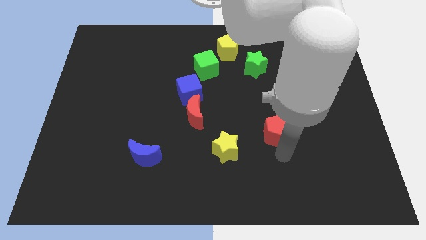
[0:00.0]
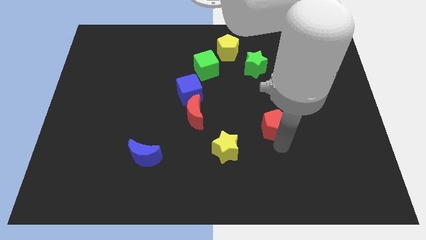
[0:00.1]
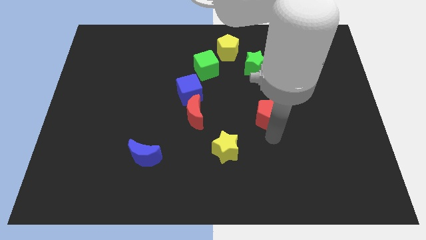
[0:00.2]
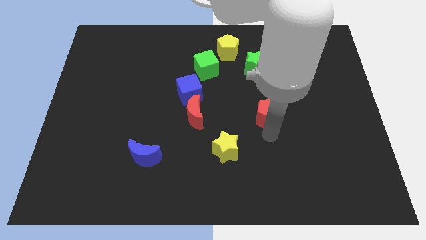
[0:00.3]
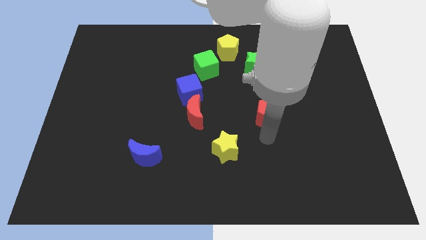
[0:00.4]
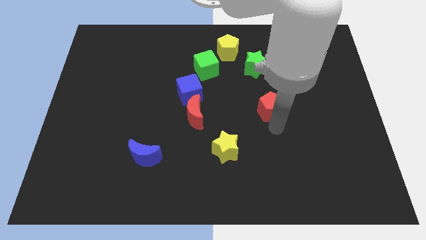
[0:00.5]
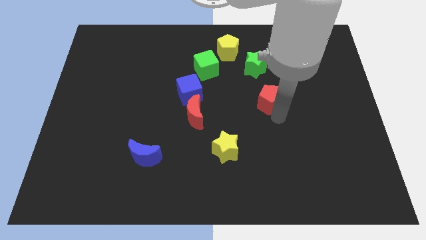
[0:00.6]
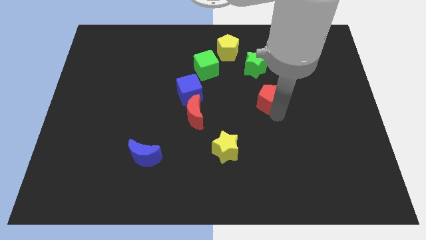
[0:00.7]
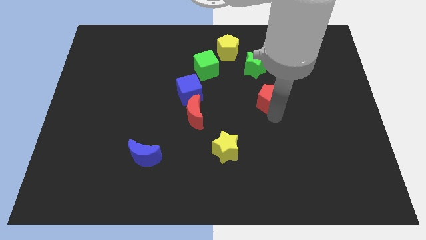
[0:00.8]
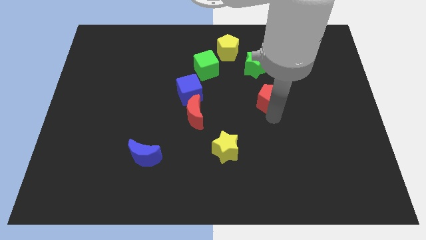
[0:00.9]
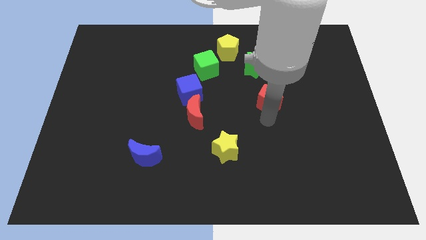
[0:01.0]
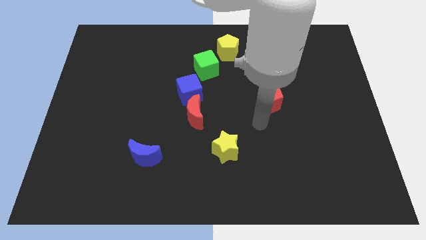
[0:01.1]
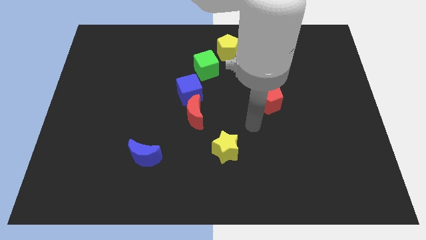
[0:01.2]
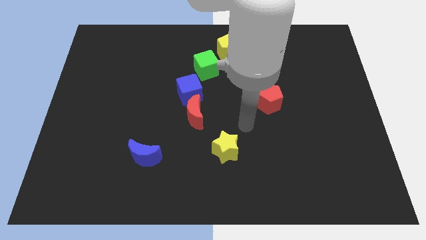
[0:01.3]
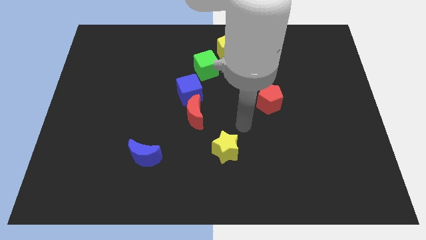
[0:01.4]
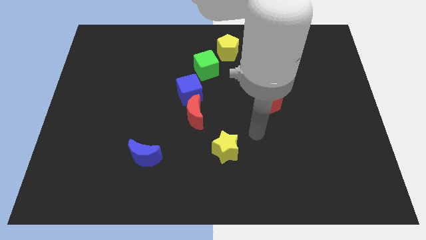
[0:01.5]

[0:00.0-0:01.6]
push the red pentagon towards bottom of green star

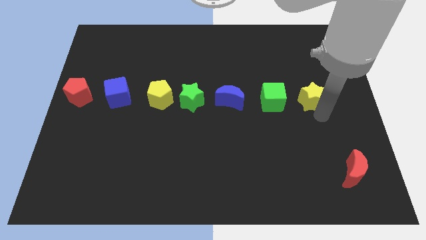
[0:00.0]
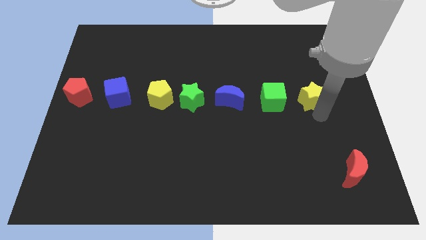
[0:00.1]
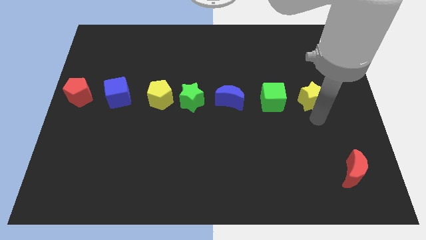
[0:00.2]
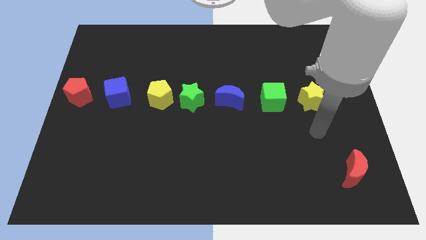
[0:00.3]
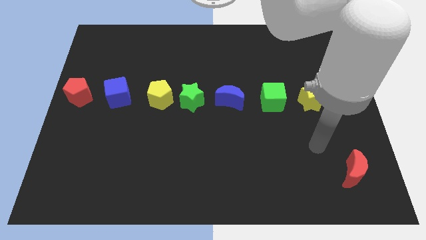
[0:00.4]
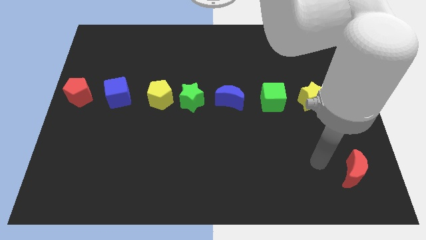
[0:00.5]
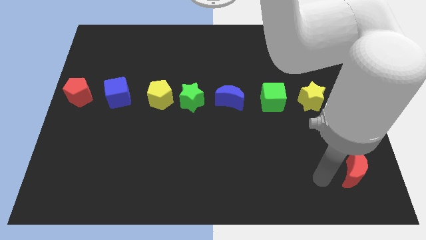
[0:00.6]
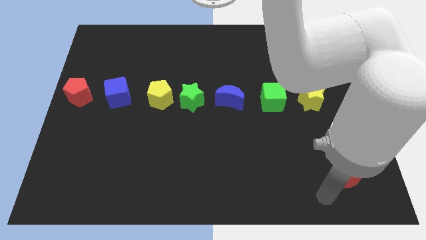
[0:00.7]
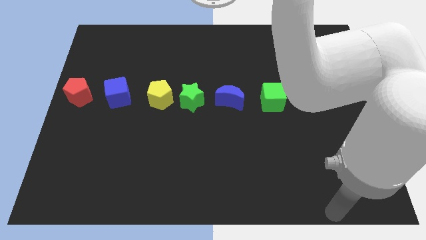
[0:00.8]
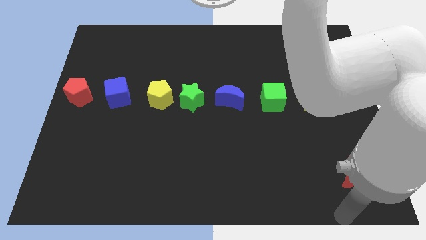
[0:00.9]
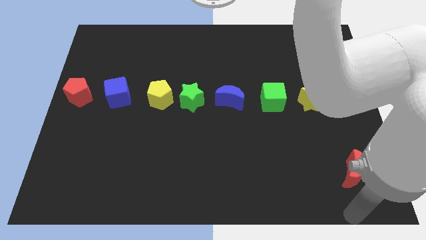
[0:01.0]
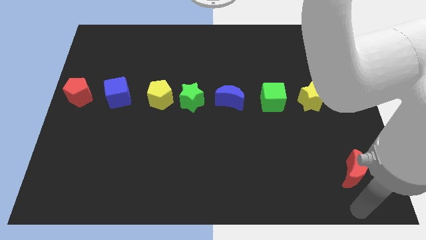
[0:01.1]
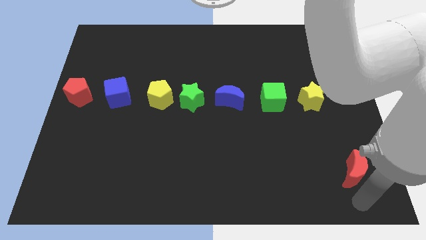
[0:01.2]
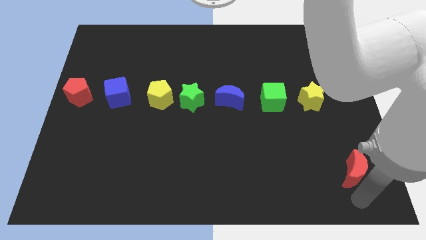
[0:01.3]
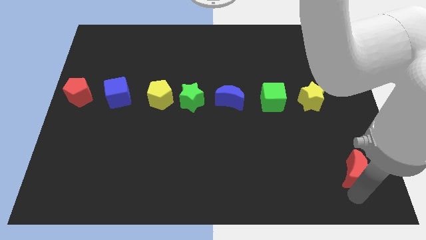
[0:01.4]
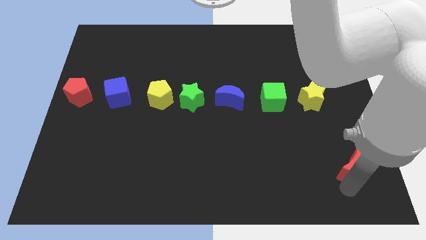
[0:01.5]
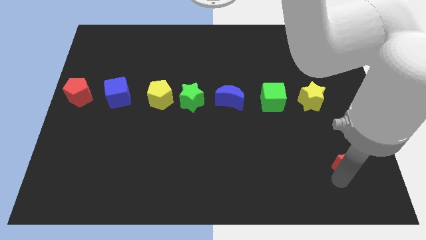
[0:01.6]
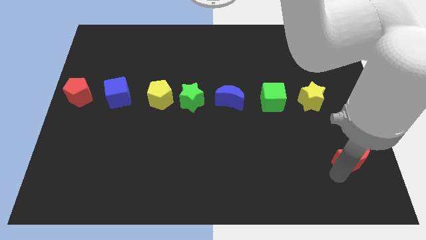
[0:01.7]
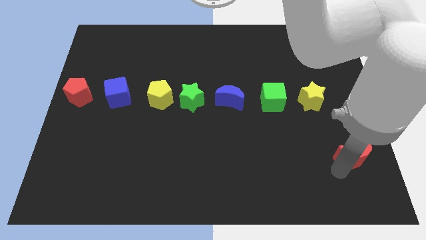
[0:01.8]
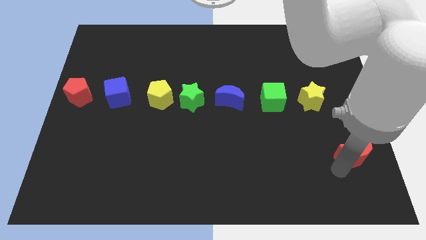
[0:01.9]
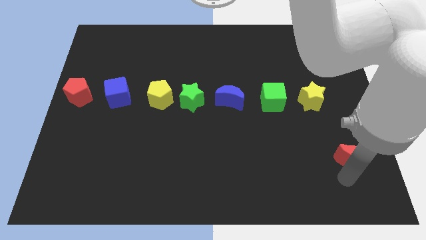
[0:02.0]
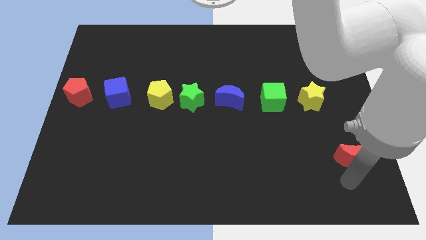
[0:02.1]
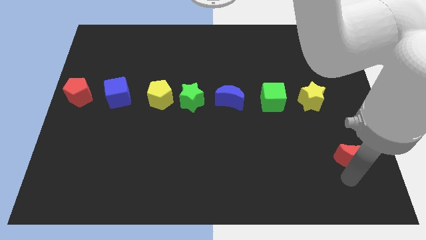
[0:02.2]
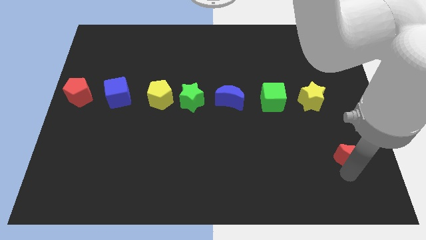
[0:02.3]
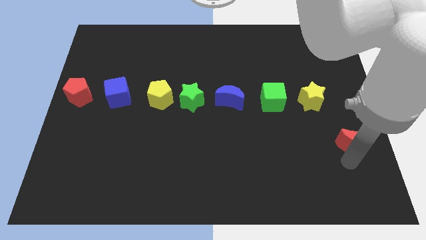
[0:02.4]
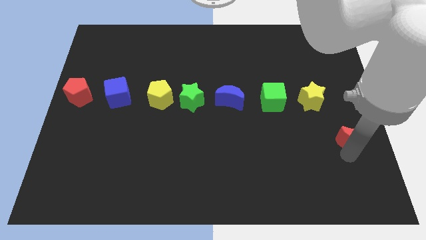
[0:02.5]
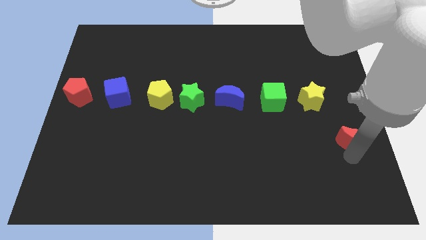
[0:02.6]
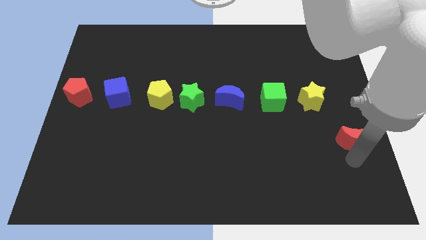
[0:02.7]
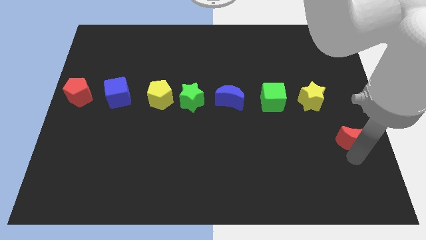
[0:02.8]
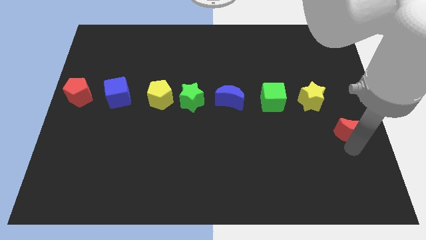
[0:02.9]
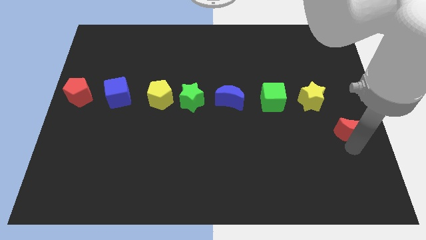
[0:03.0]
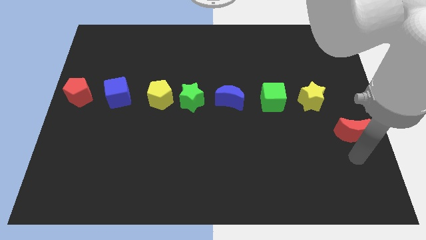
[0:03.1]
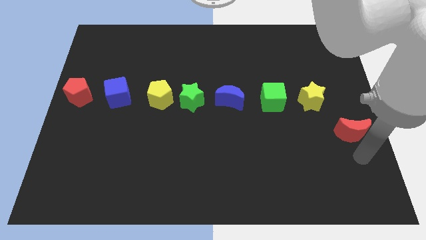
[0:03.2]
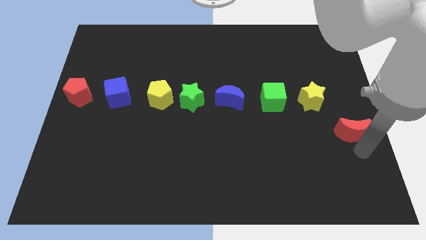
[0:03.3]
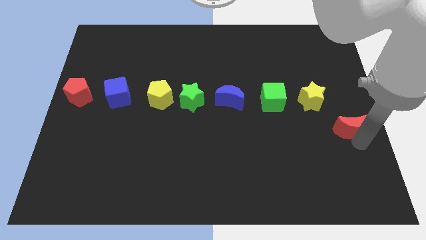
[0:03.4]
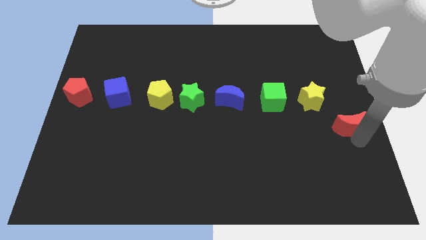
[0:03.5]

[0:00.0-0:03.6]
move red moon to the bottom right of the yellow star

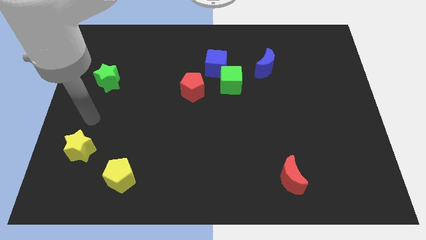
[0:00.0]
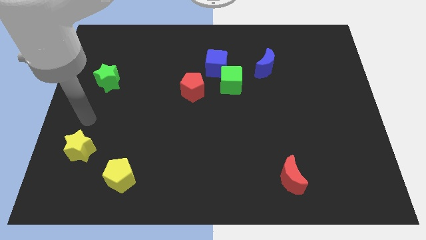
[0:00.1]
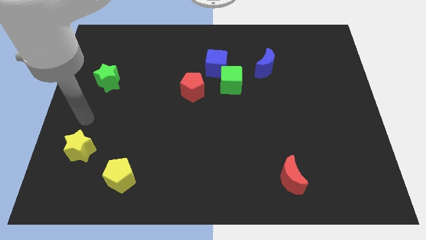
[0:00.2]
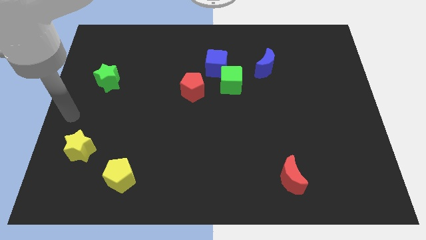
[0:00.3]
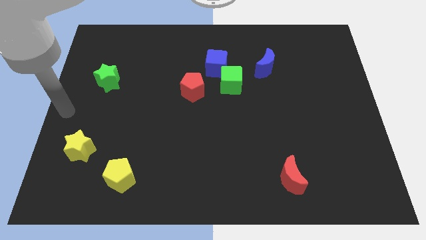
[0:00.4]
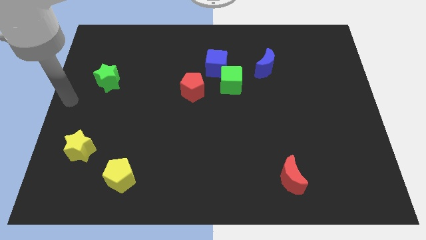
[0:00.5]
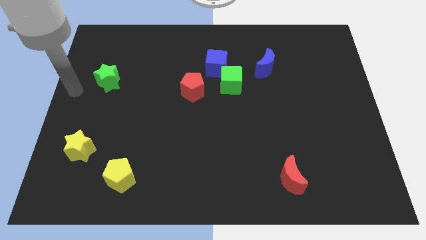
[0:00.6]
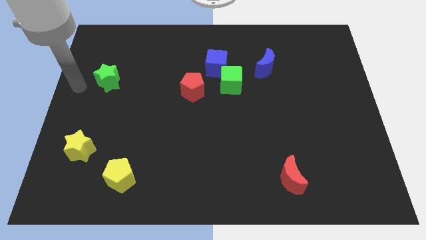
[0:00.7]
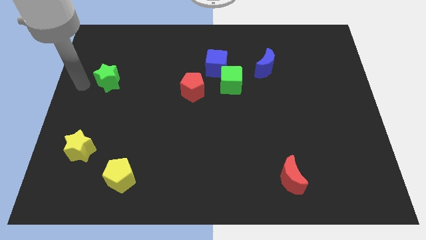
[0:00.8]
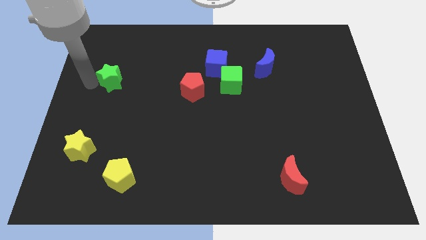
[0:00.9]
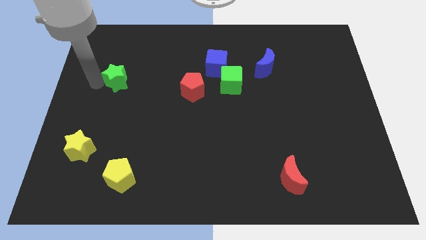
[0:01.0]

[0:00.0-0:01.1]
touch the green star on its left

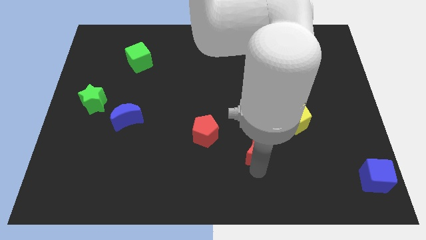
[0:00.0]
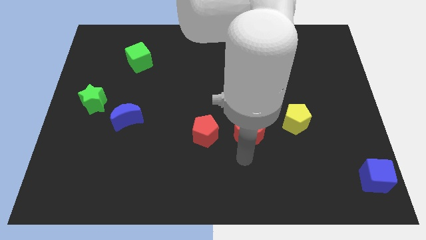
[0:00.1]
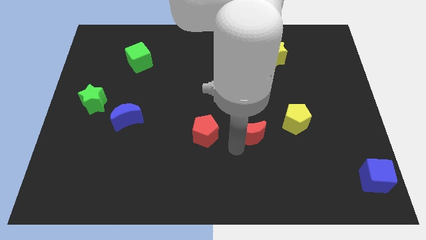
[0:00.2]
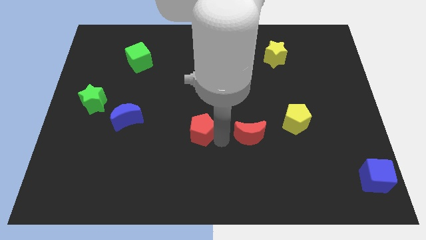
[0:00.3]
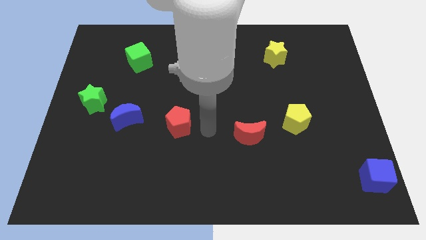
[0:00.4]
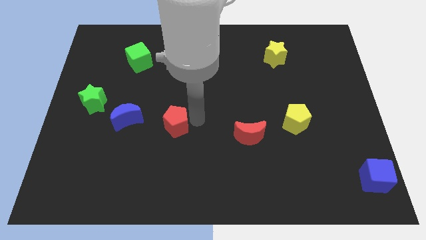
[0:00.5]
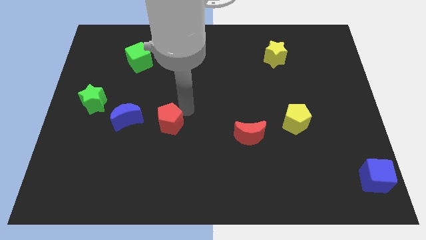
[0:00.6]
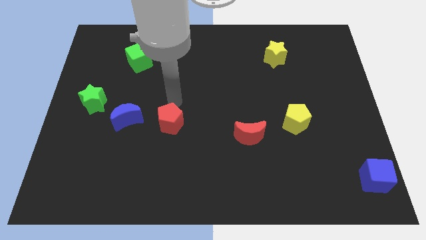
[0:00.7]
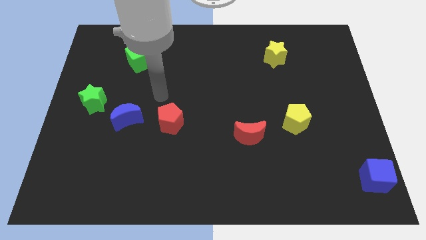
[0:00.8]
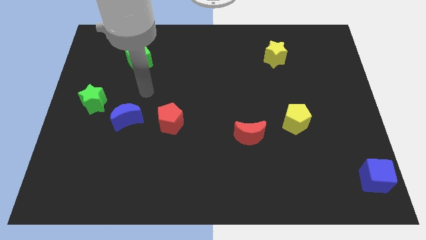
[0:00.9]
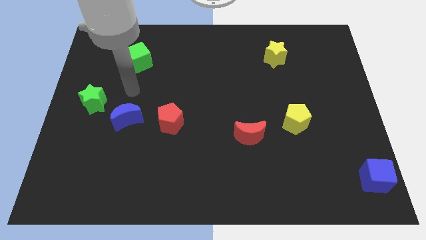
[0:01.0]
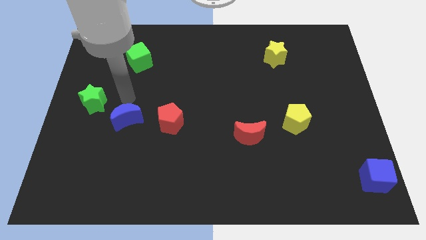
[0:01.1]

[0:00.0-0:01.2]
move the red pentagon to the right of the blue moon

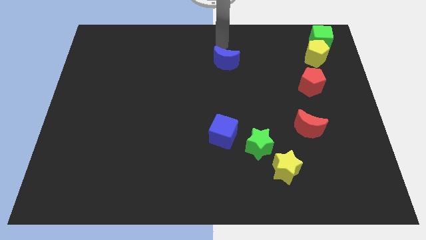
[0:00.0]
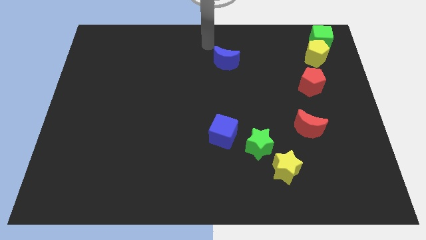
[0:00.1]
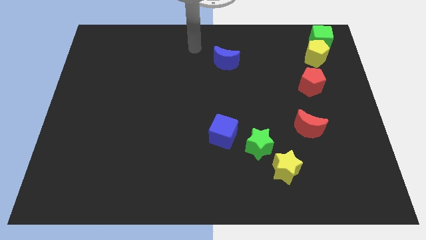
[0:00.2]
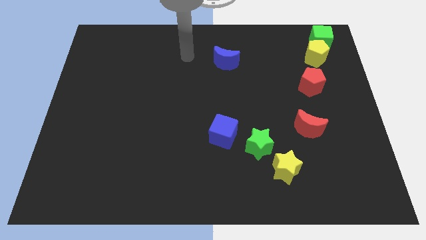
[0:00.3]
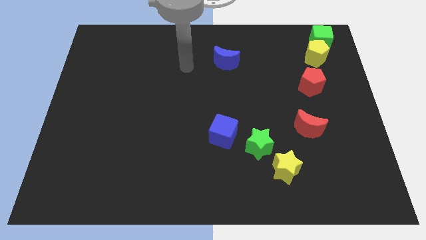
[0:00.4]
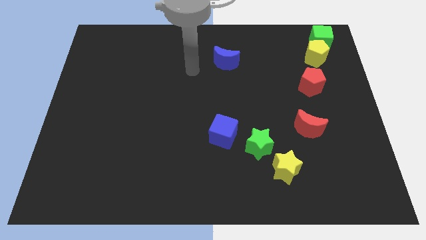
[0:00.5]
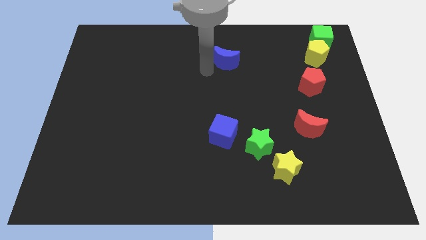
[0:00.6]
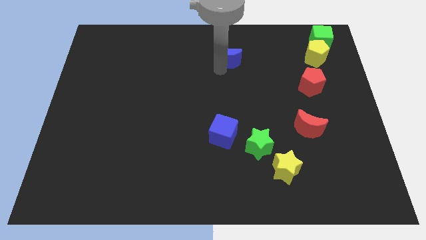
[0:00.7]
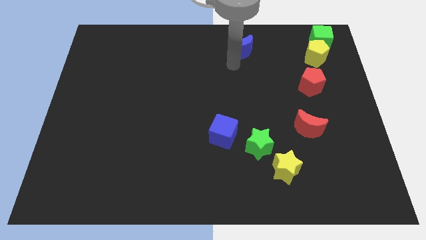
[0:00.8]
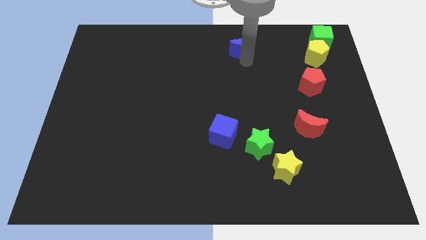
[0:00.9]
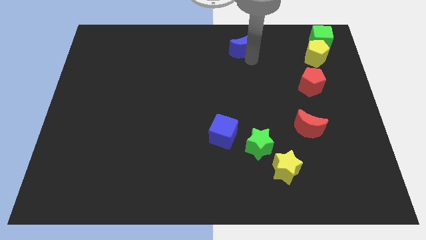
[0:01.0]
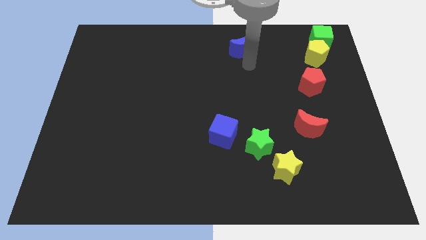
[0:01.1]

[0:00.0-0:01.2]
put hand at the bottom of blue crescent
